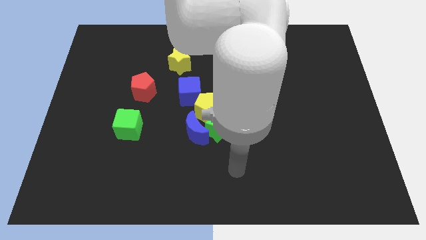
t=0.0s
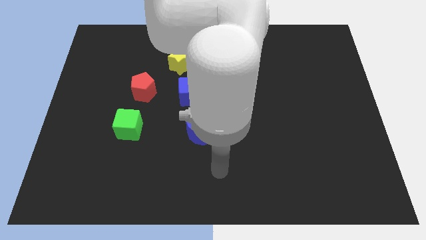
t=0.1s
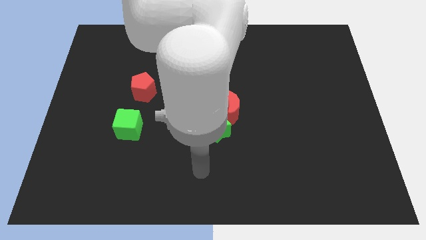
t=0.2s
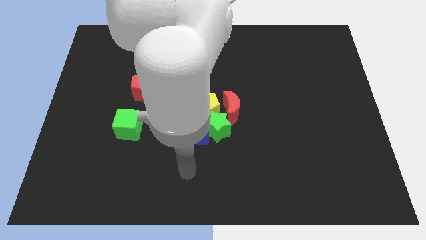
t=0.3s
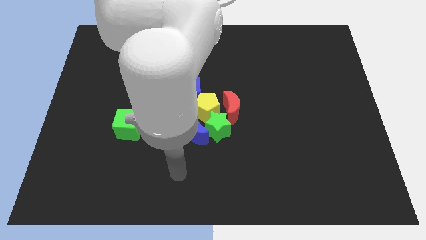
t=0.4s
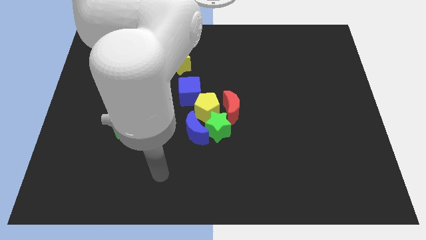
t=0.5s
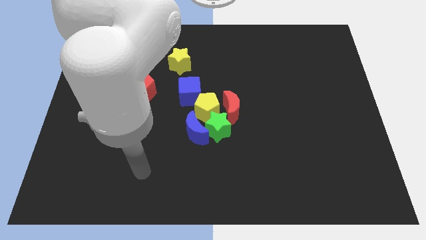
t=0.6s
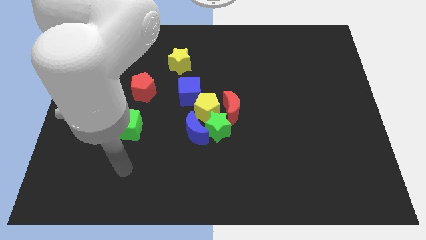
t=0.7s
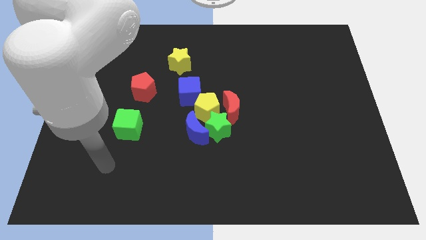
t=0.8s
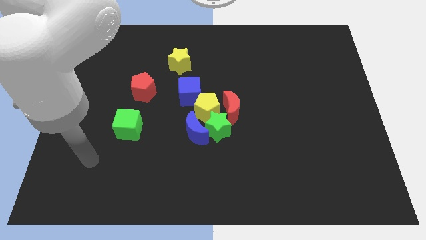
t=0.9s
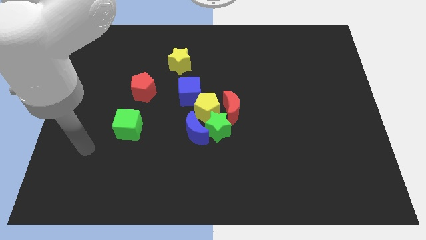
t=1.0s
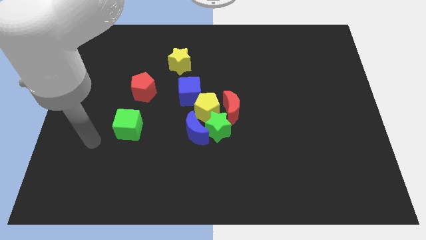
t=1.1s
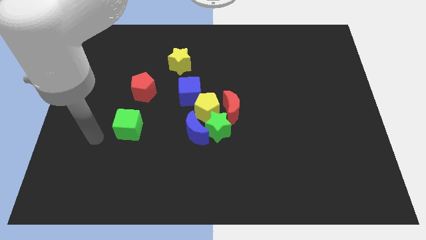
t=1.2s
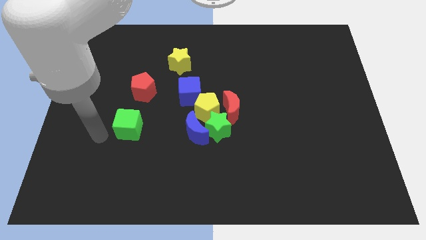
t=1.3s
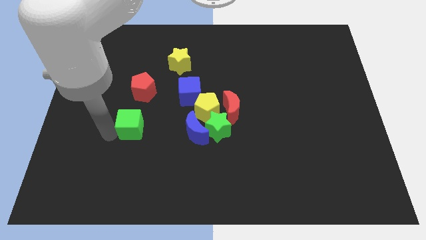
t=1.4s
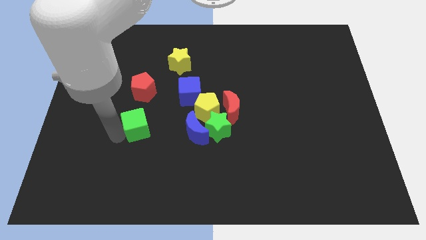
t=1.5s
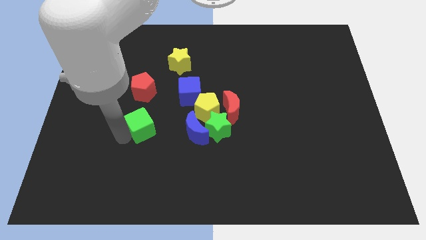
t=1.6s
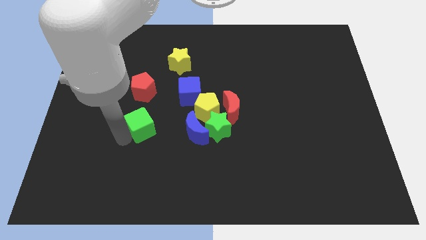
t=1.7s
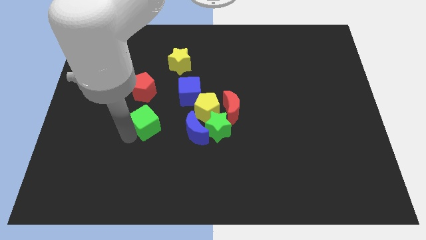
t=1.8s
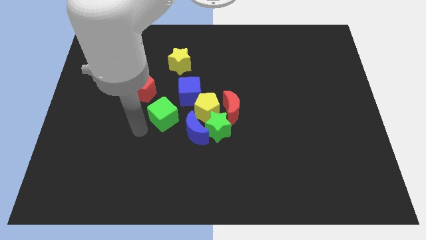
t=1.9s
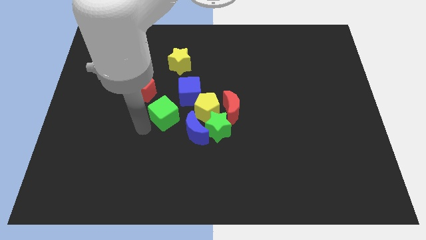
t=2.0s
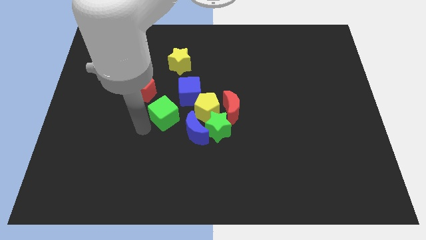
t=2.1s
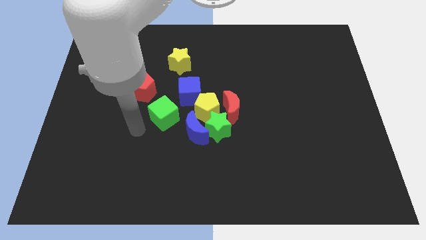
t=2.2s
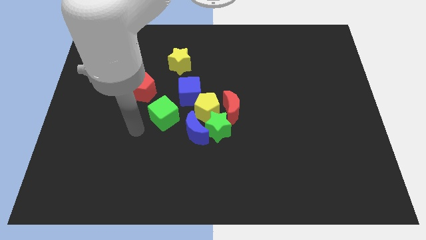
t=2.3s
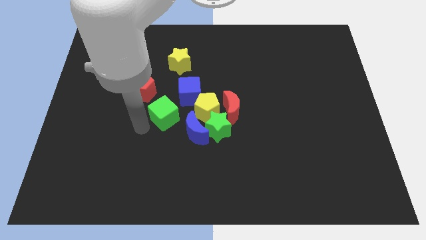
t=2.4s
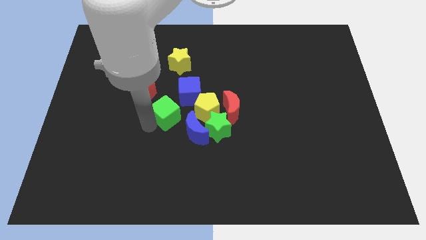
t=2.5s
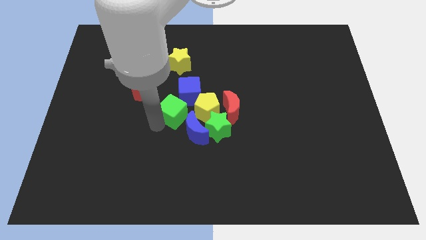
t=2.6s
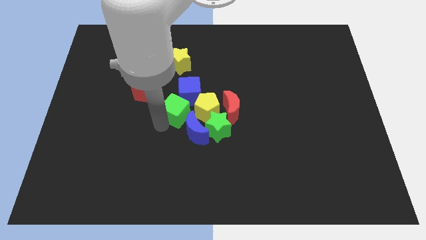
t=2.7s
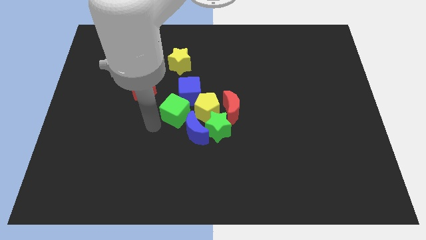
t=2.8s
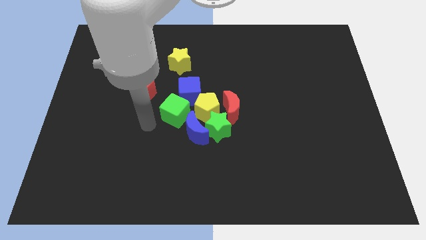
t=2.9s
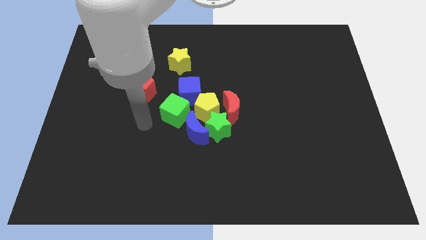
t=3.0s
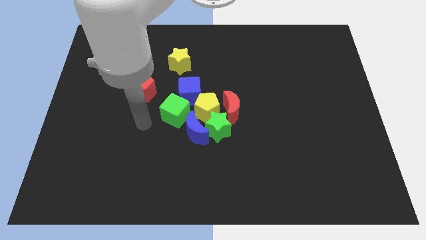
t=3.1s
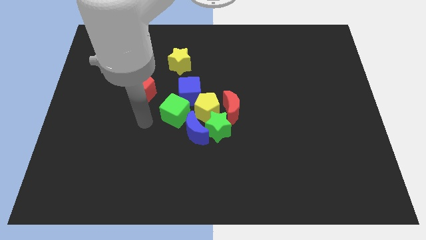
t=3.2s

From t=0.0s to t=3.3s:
drag the green cube to the top left side of the blue moon

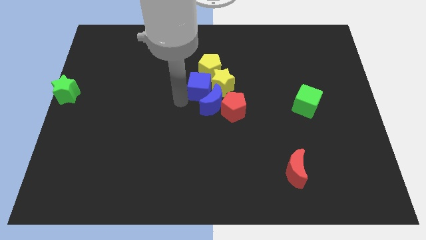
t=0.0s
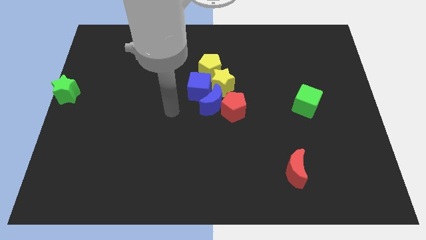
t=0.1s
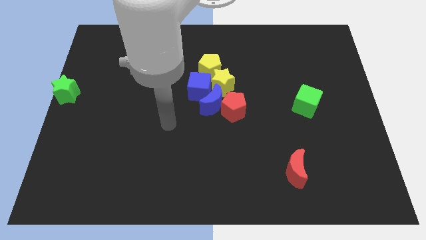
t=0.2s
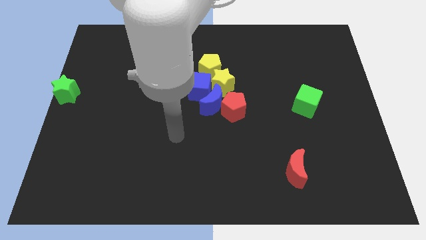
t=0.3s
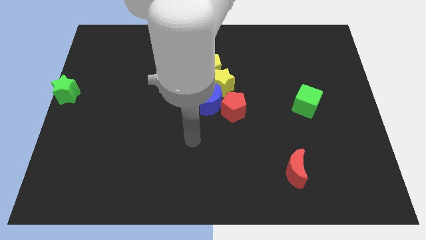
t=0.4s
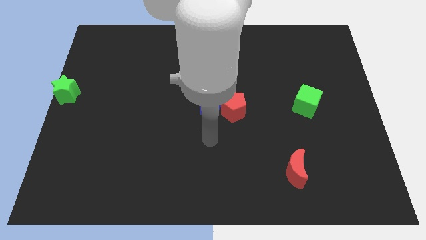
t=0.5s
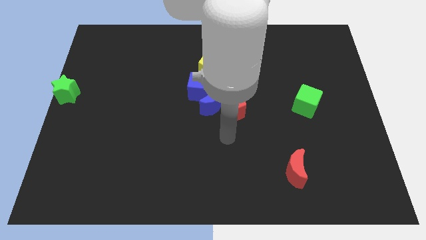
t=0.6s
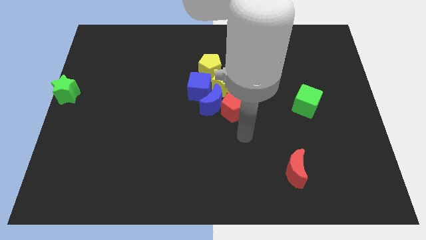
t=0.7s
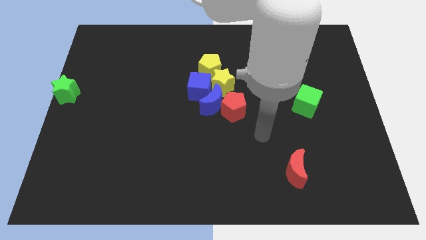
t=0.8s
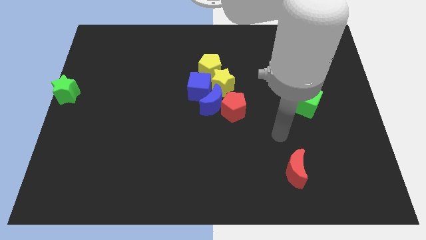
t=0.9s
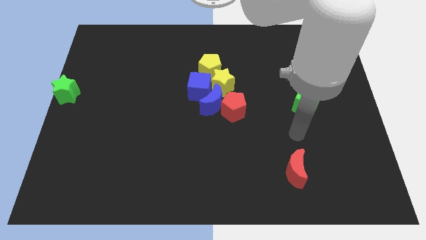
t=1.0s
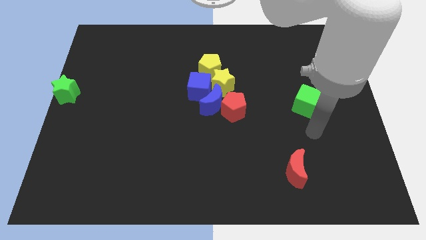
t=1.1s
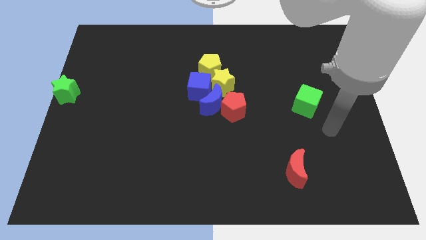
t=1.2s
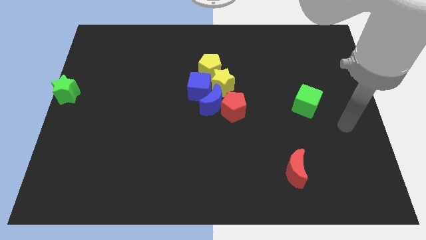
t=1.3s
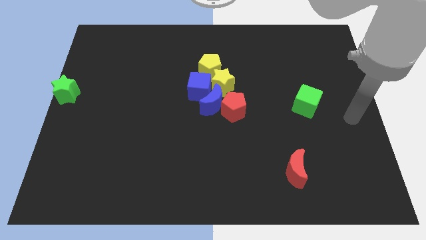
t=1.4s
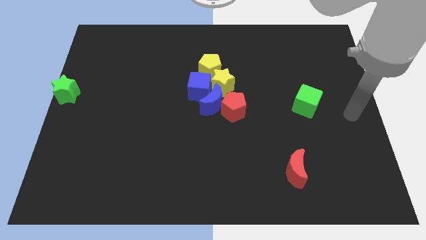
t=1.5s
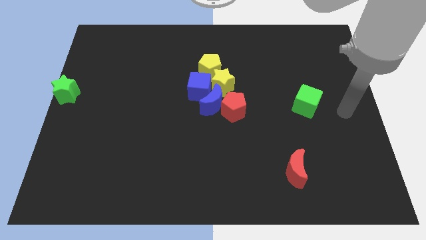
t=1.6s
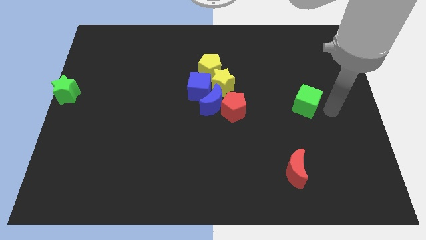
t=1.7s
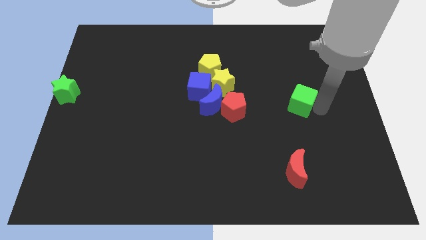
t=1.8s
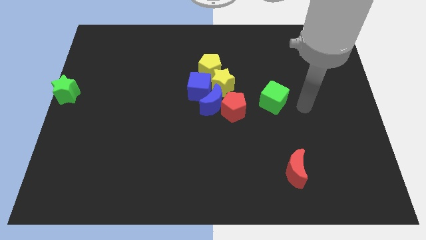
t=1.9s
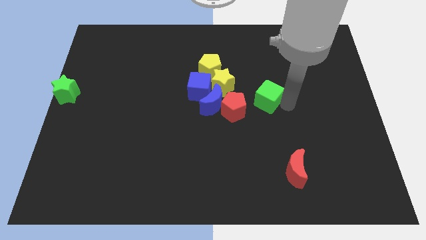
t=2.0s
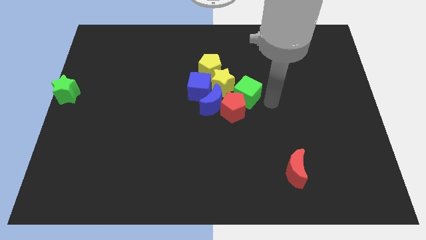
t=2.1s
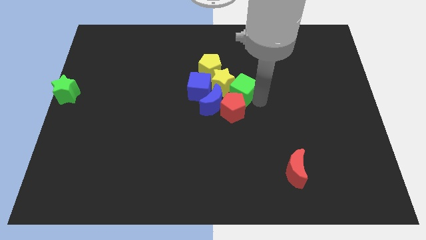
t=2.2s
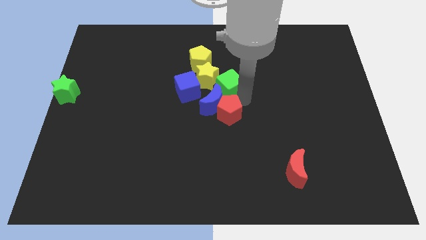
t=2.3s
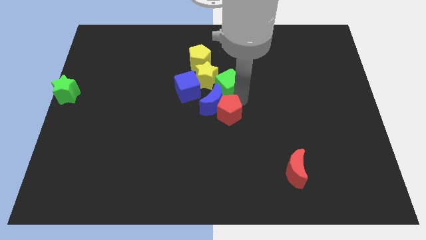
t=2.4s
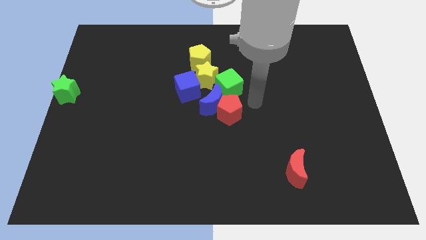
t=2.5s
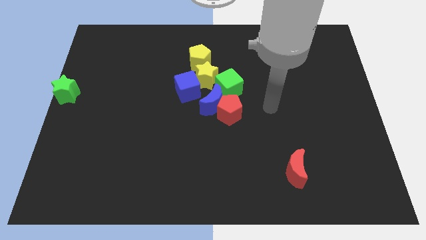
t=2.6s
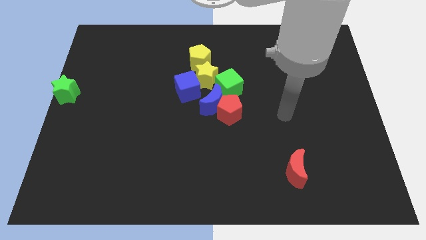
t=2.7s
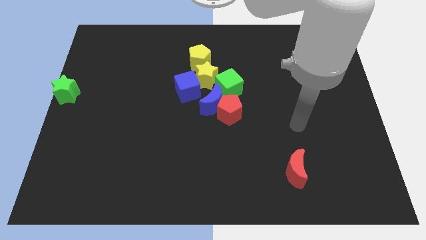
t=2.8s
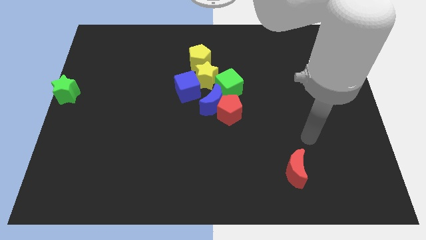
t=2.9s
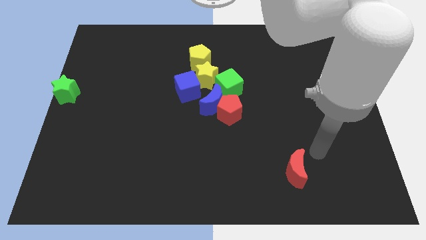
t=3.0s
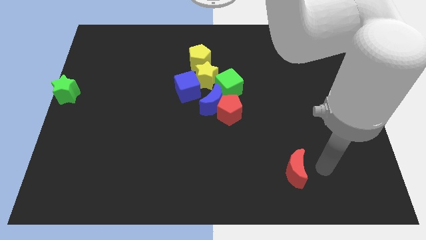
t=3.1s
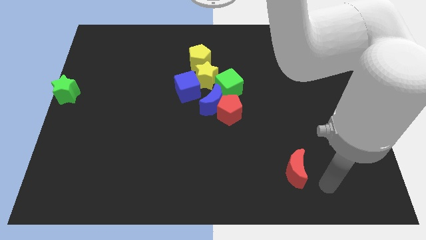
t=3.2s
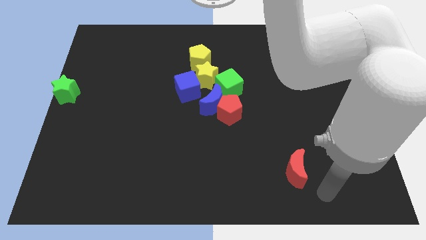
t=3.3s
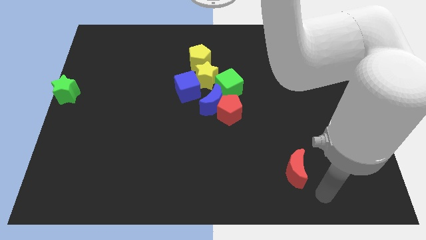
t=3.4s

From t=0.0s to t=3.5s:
move the green cube to the top of the red pentagon

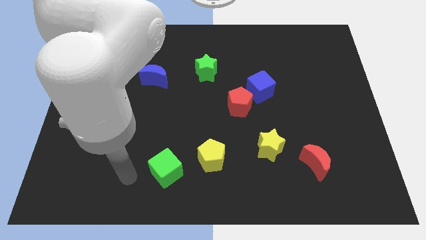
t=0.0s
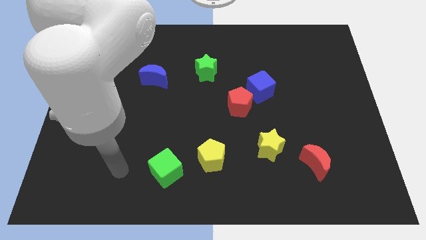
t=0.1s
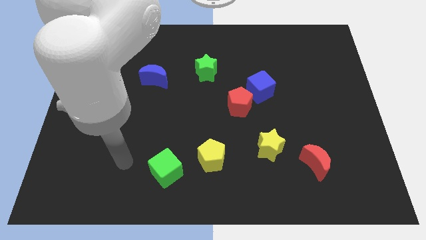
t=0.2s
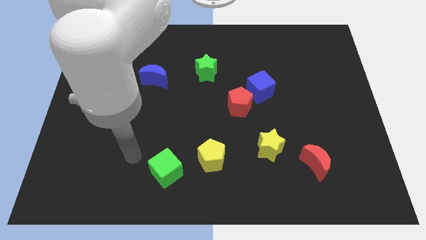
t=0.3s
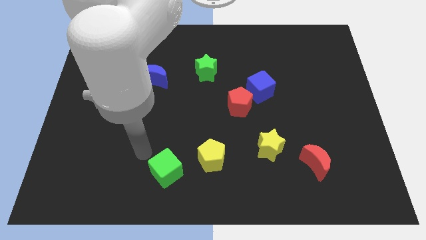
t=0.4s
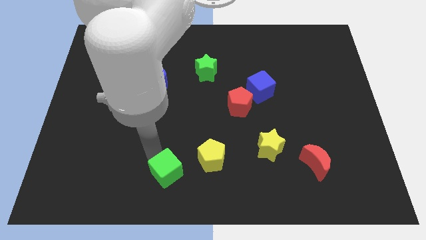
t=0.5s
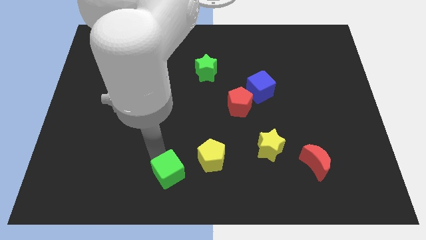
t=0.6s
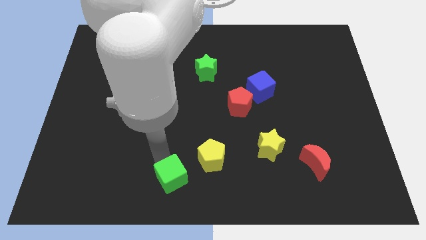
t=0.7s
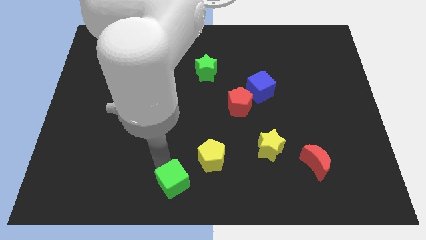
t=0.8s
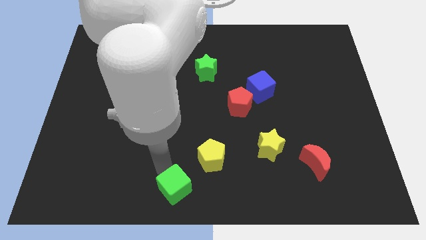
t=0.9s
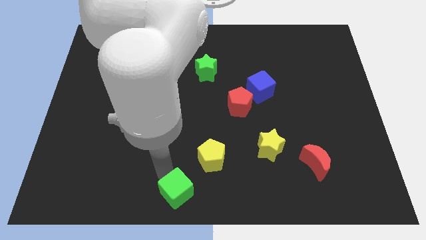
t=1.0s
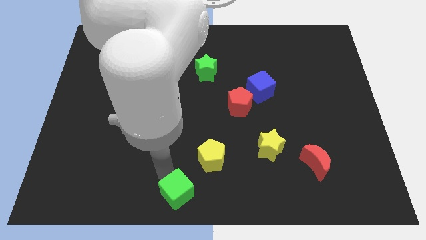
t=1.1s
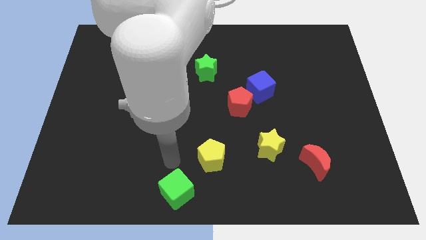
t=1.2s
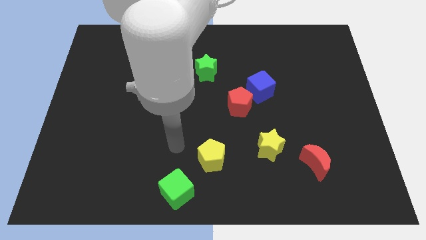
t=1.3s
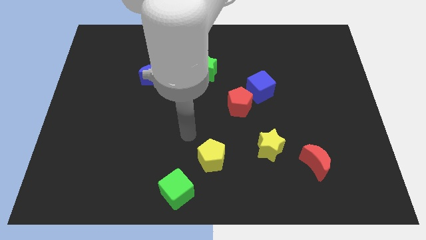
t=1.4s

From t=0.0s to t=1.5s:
move the green cube to the bottom center

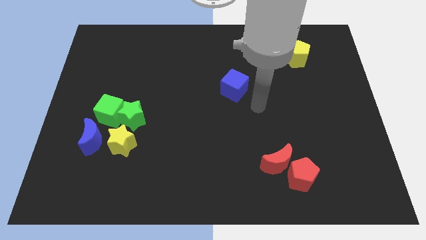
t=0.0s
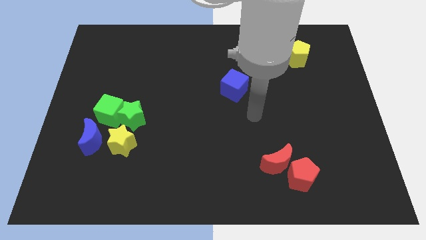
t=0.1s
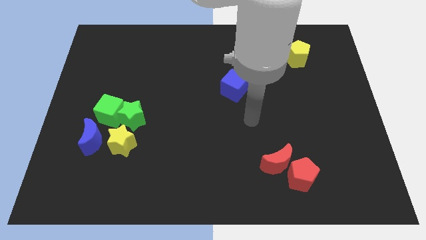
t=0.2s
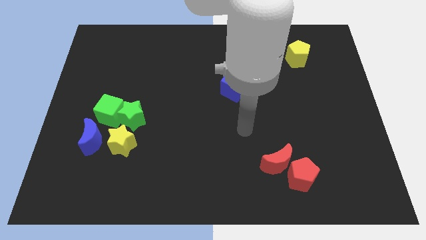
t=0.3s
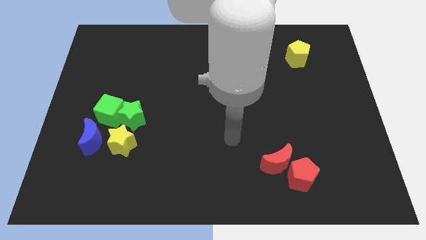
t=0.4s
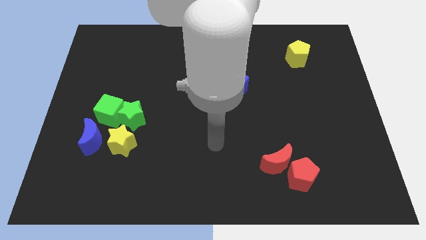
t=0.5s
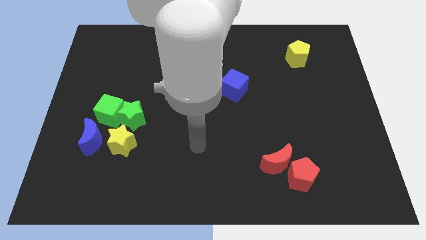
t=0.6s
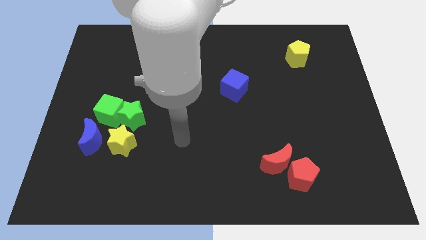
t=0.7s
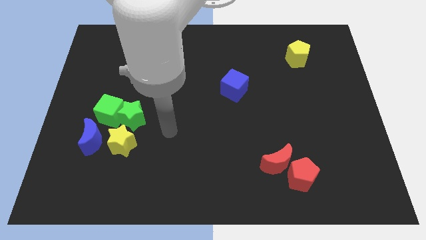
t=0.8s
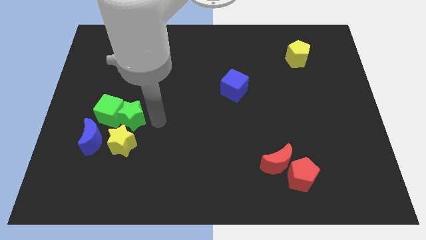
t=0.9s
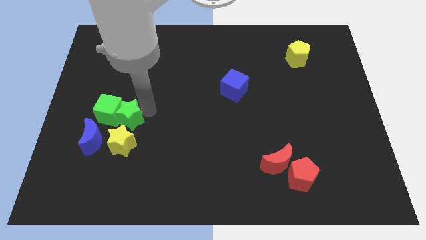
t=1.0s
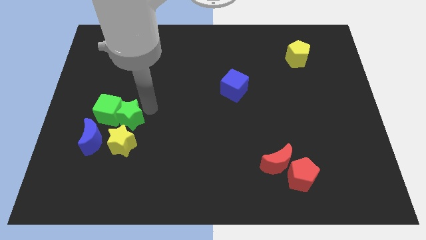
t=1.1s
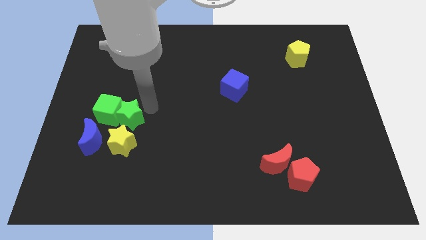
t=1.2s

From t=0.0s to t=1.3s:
place the arm towards the right side of the green star
